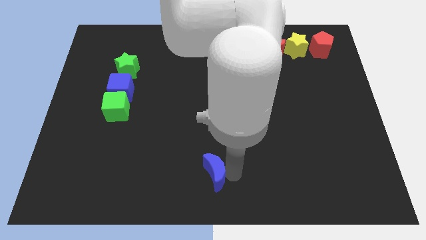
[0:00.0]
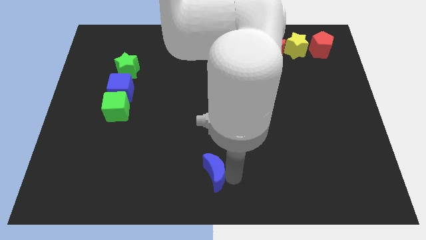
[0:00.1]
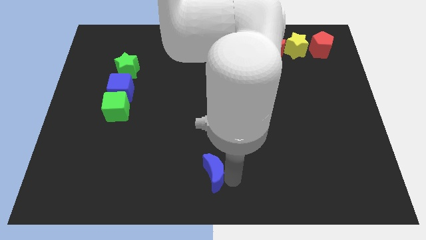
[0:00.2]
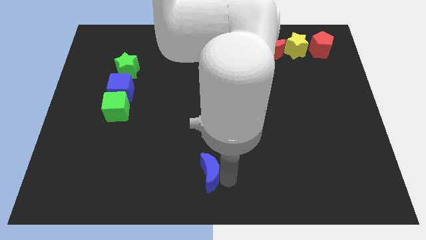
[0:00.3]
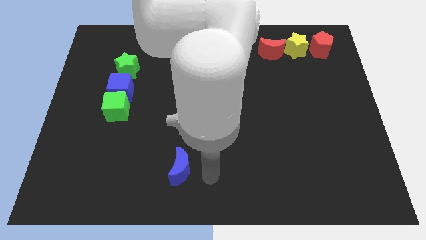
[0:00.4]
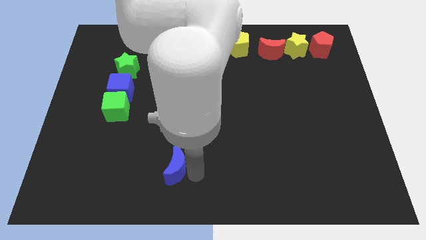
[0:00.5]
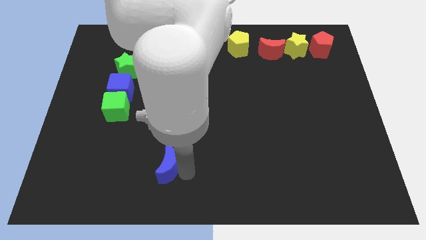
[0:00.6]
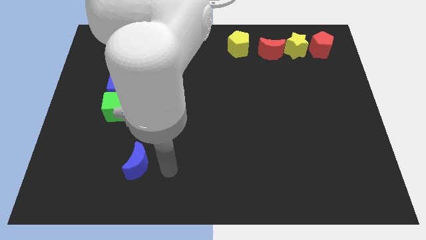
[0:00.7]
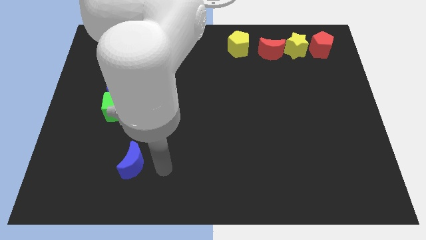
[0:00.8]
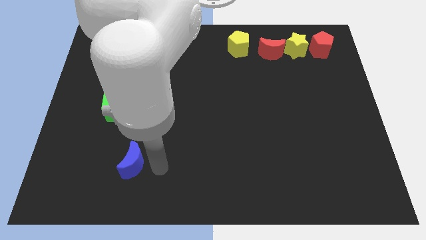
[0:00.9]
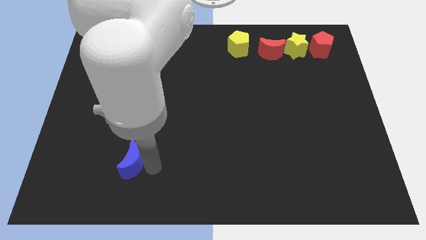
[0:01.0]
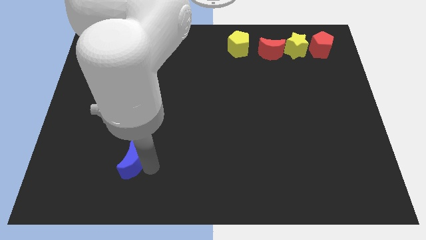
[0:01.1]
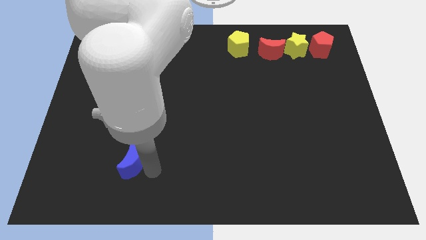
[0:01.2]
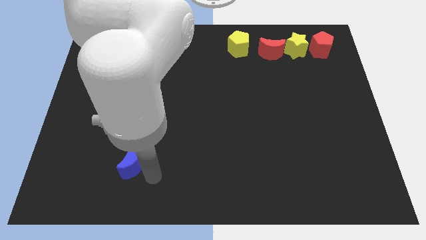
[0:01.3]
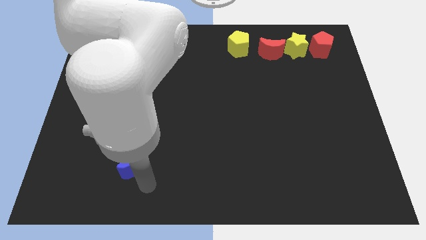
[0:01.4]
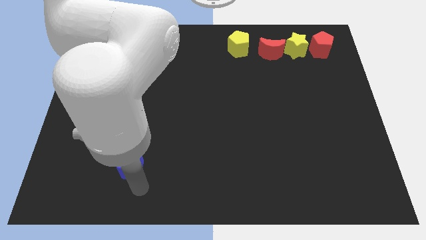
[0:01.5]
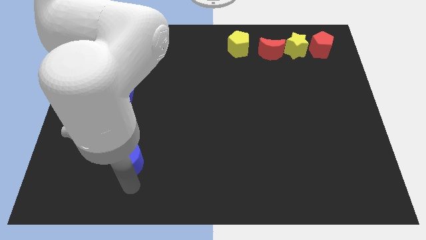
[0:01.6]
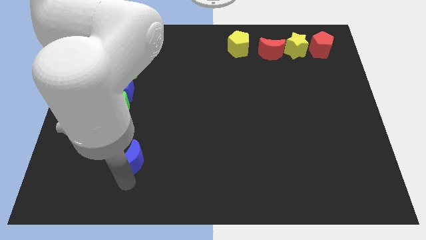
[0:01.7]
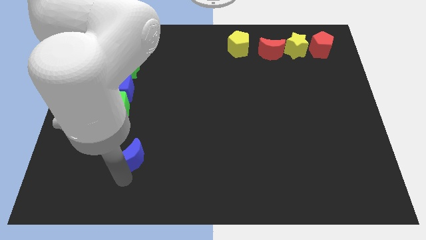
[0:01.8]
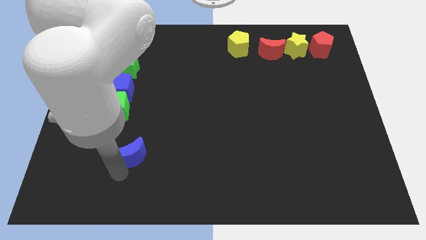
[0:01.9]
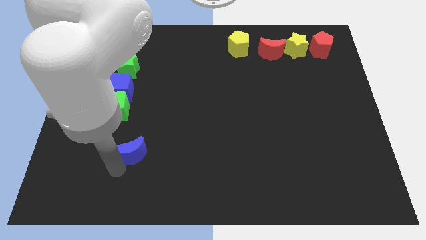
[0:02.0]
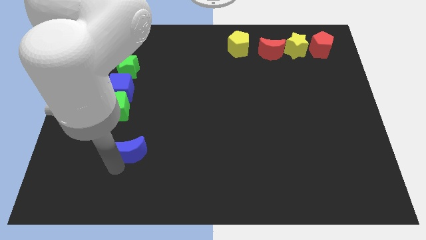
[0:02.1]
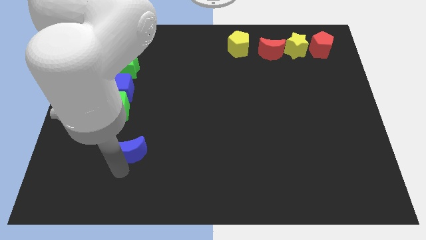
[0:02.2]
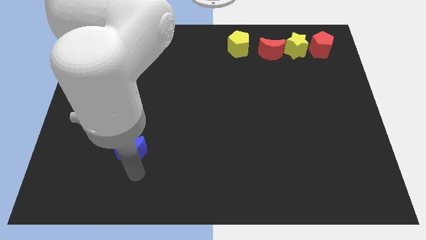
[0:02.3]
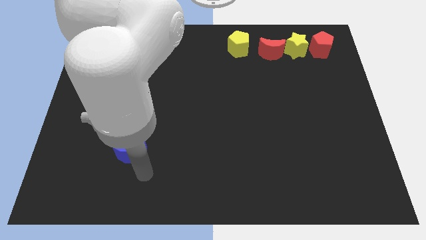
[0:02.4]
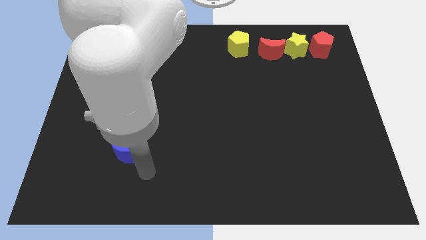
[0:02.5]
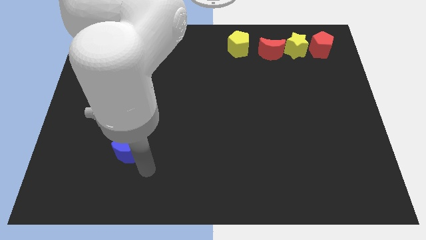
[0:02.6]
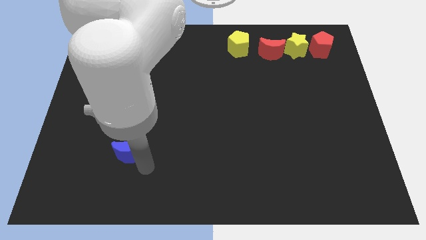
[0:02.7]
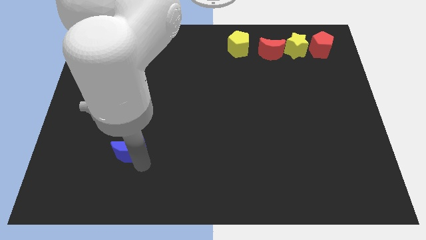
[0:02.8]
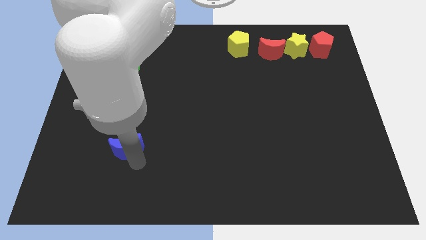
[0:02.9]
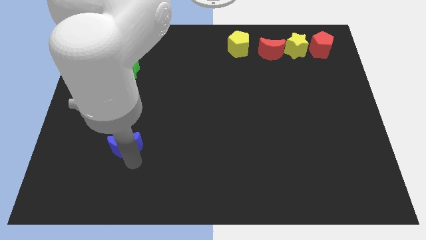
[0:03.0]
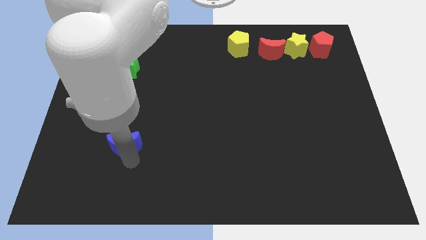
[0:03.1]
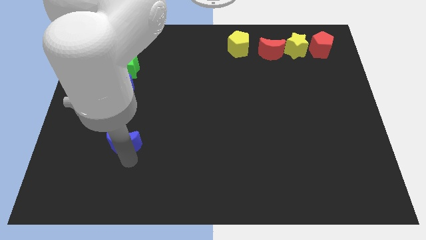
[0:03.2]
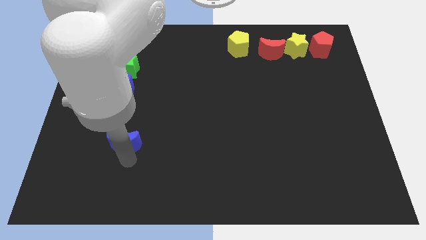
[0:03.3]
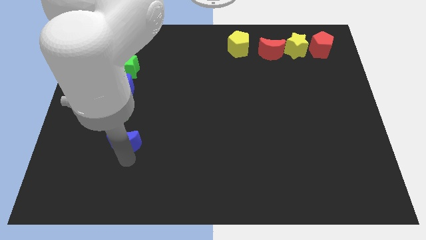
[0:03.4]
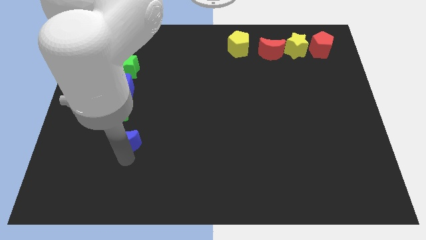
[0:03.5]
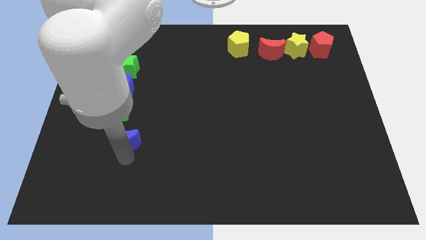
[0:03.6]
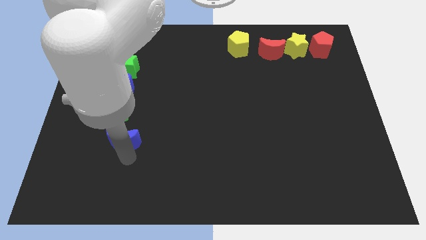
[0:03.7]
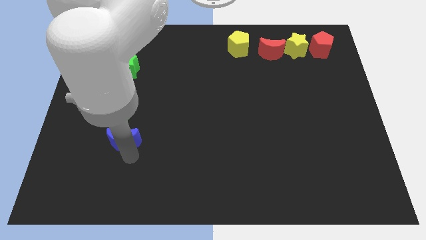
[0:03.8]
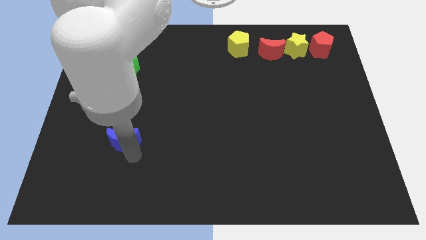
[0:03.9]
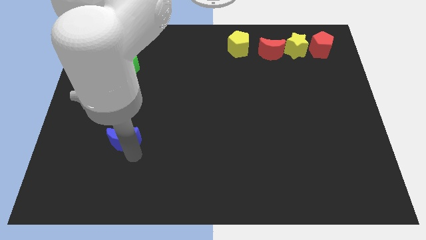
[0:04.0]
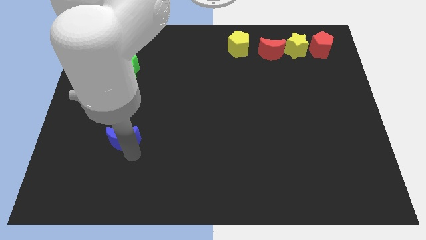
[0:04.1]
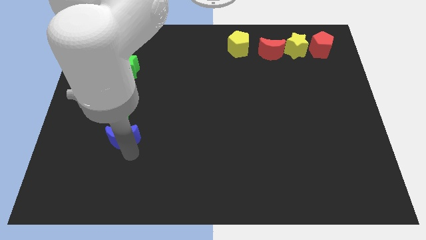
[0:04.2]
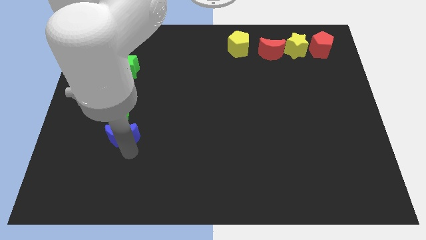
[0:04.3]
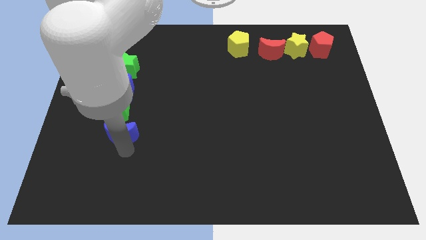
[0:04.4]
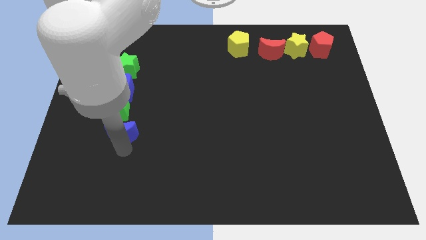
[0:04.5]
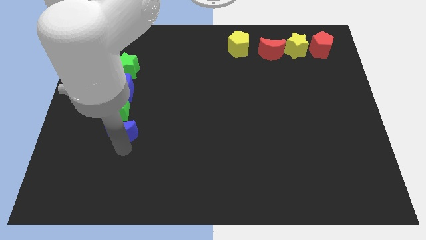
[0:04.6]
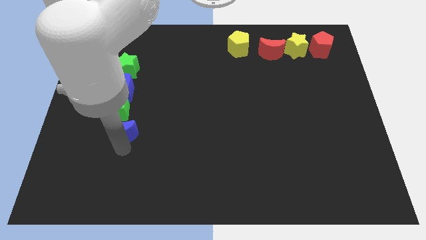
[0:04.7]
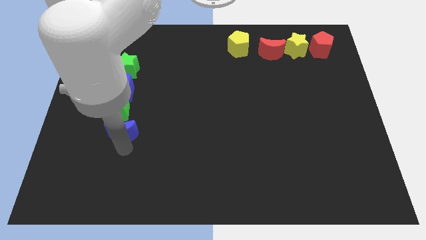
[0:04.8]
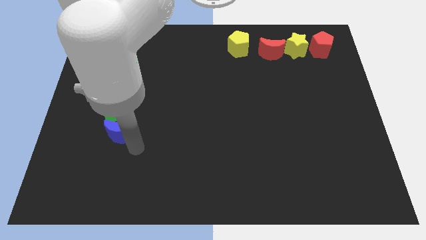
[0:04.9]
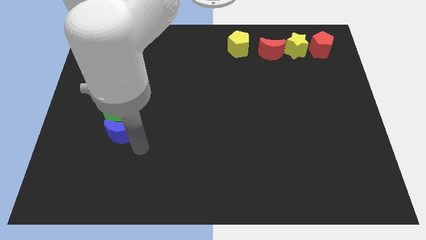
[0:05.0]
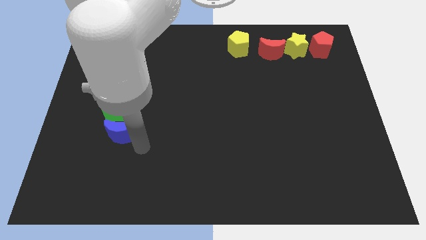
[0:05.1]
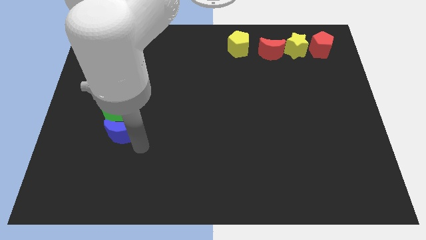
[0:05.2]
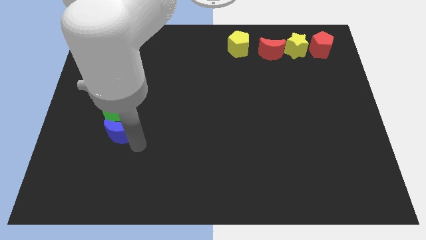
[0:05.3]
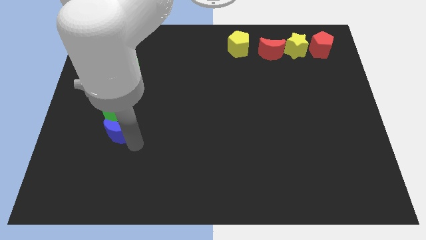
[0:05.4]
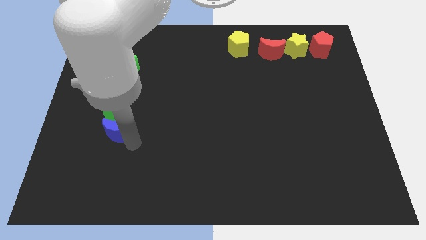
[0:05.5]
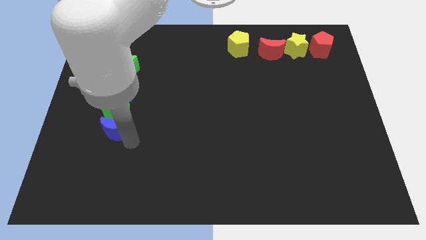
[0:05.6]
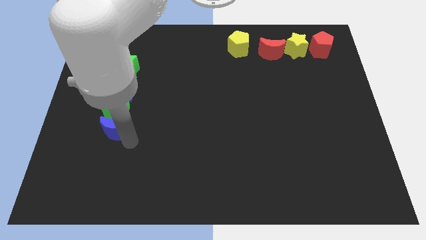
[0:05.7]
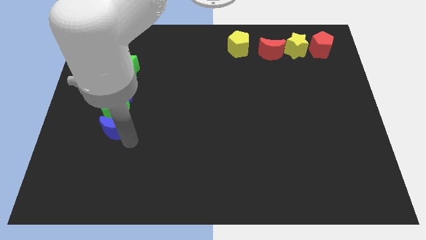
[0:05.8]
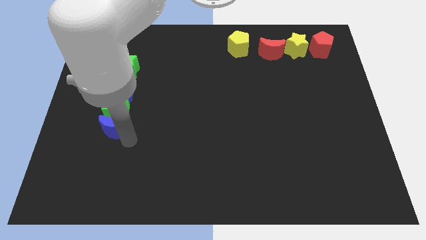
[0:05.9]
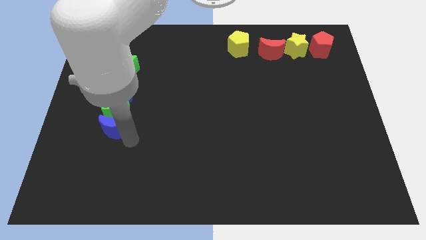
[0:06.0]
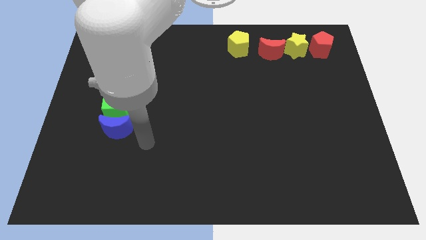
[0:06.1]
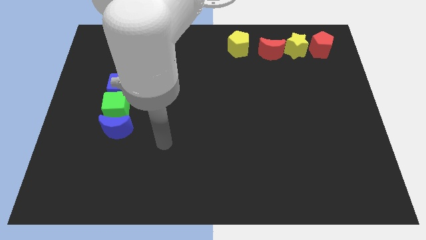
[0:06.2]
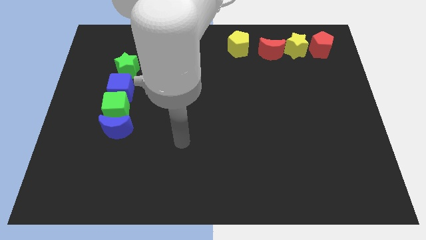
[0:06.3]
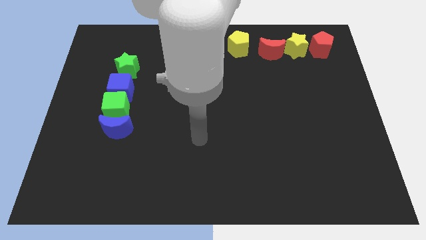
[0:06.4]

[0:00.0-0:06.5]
put the blue crescent at the bottom side of the vertical line of blocks

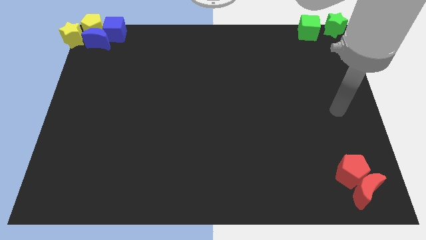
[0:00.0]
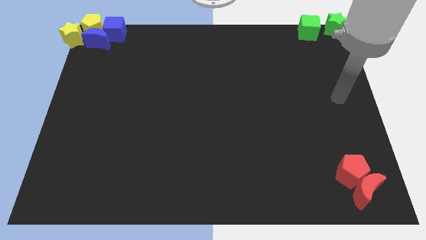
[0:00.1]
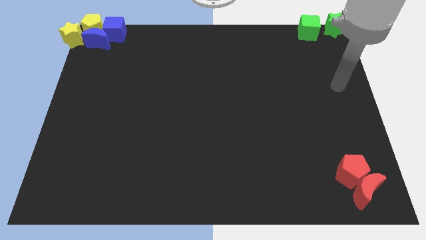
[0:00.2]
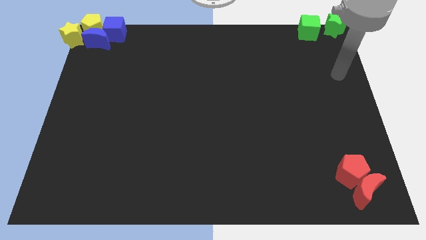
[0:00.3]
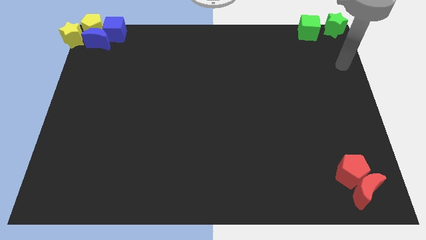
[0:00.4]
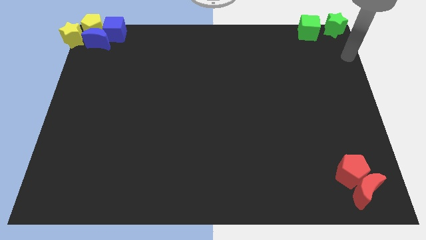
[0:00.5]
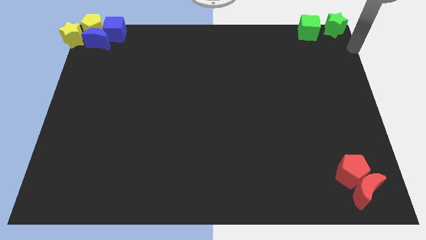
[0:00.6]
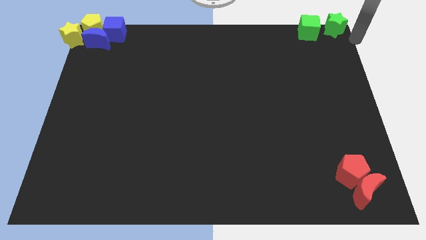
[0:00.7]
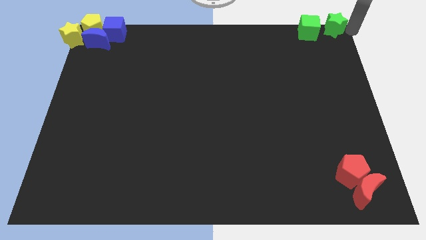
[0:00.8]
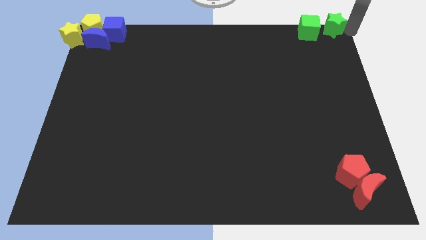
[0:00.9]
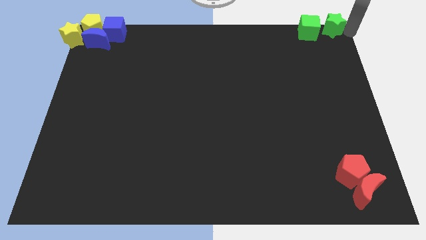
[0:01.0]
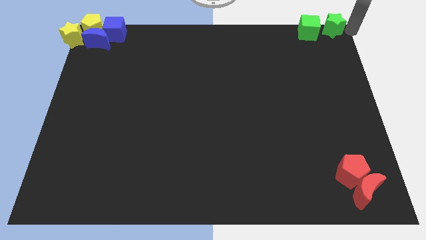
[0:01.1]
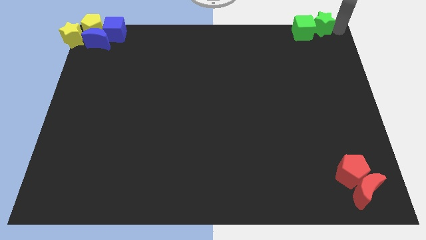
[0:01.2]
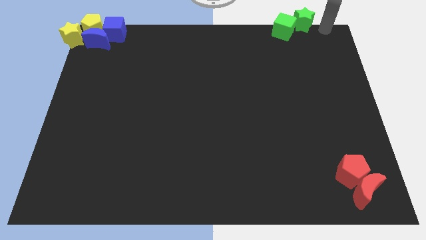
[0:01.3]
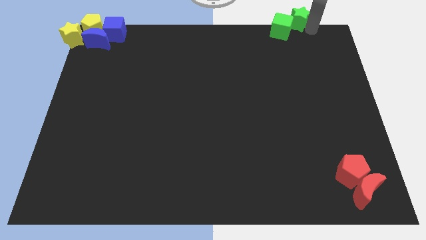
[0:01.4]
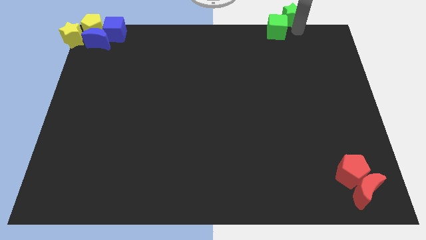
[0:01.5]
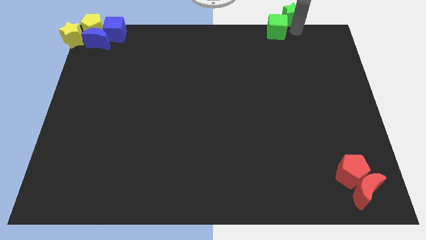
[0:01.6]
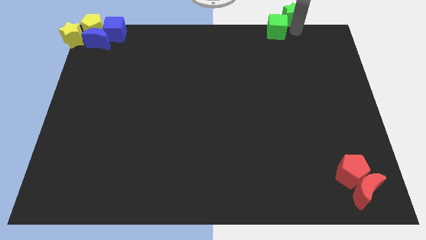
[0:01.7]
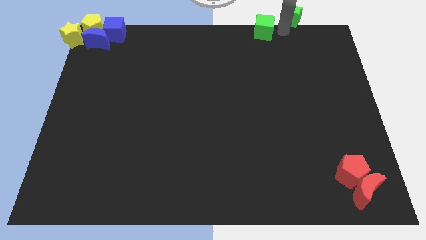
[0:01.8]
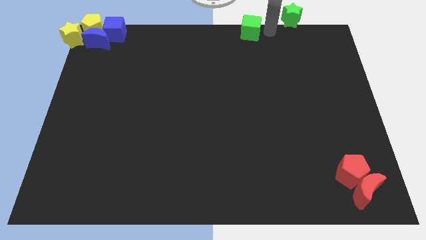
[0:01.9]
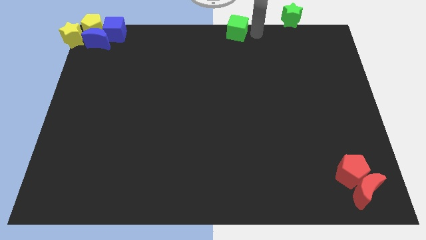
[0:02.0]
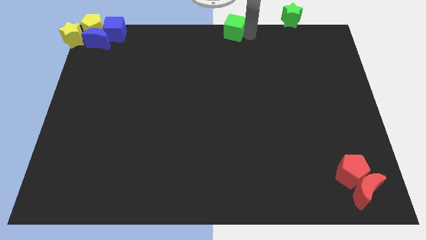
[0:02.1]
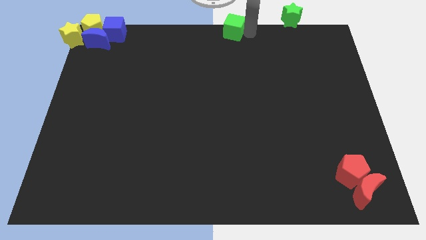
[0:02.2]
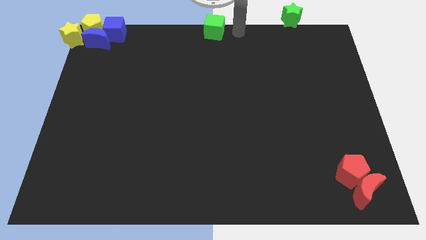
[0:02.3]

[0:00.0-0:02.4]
move the green cube to the top center of the board
